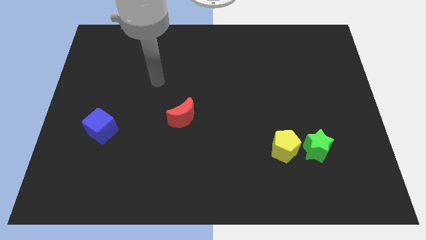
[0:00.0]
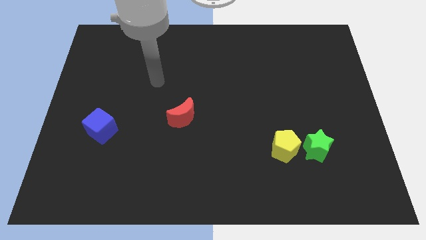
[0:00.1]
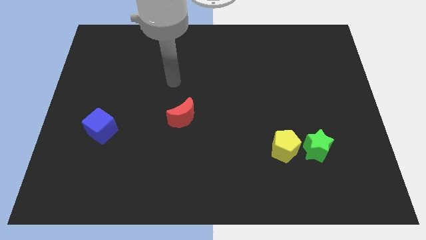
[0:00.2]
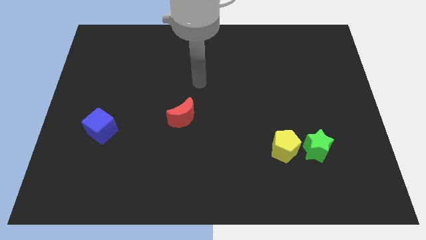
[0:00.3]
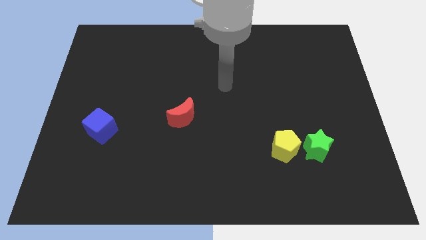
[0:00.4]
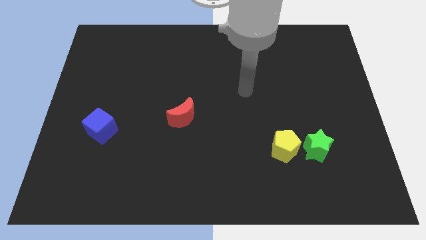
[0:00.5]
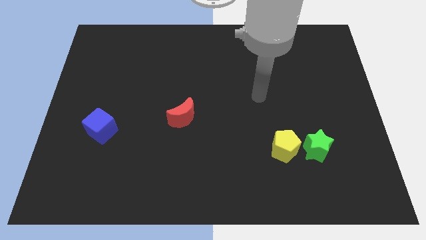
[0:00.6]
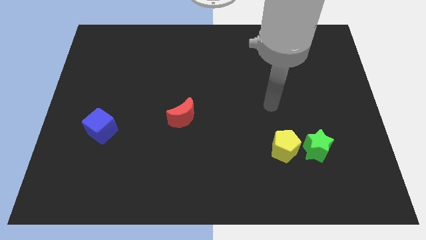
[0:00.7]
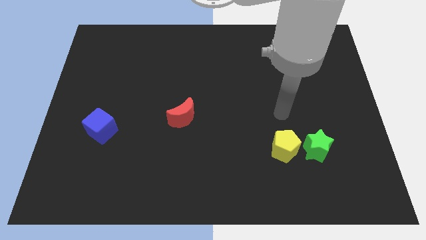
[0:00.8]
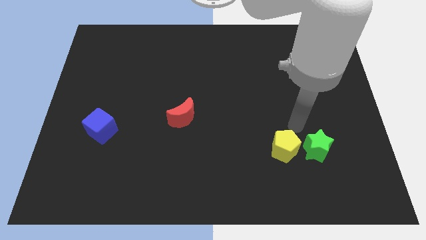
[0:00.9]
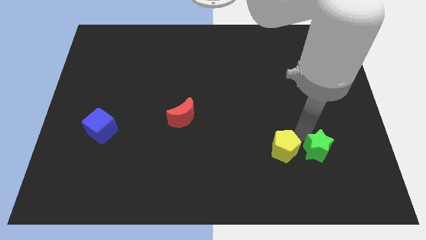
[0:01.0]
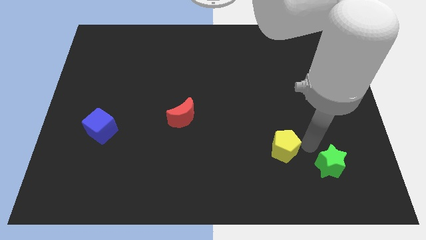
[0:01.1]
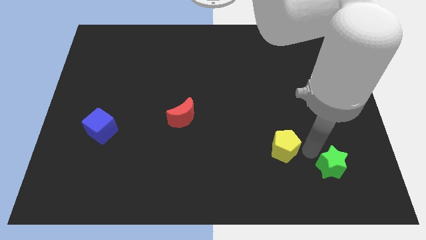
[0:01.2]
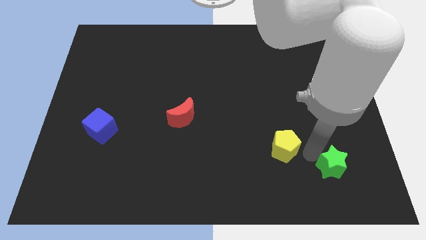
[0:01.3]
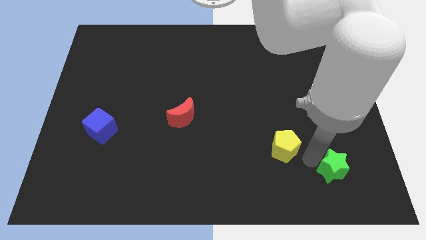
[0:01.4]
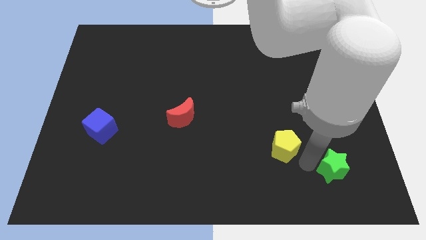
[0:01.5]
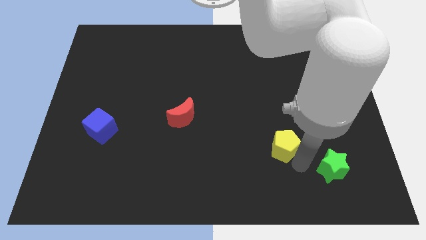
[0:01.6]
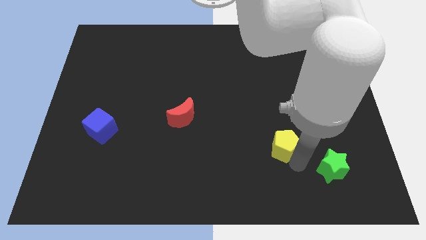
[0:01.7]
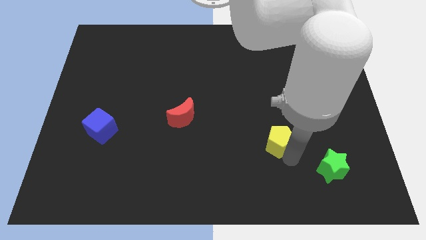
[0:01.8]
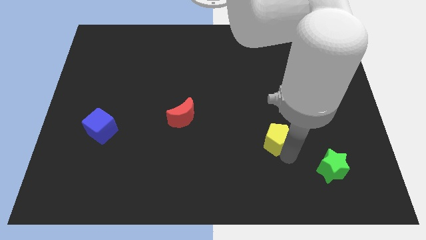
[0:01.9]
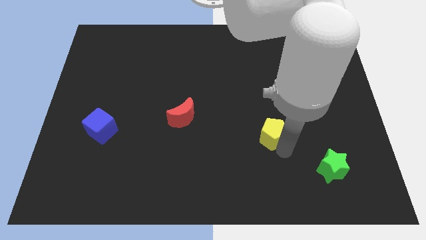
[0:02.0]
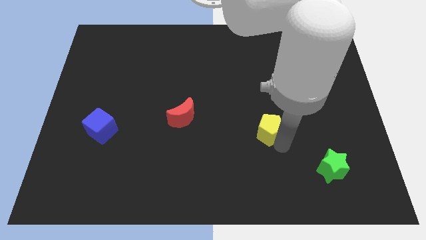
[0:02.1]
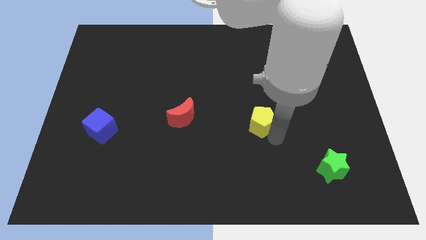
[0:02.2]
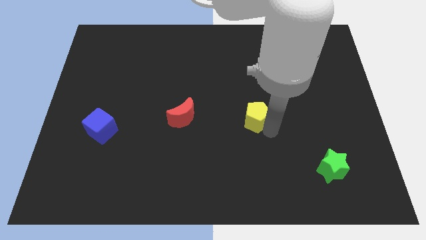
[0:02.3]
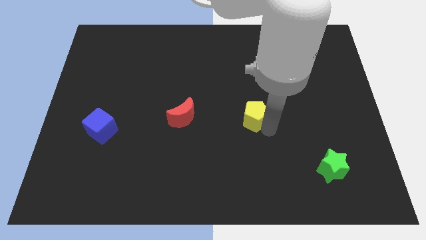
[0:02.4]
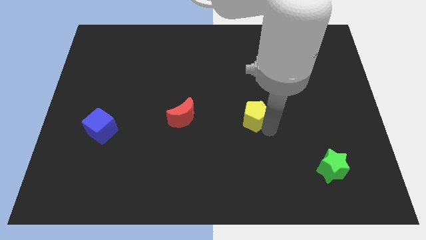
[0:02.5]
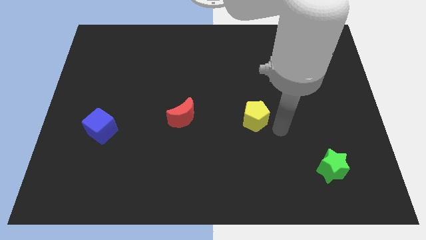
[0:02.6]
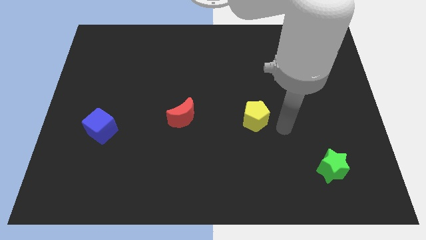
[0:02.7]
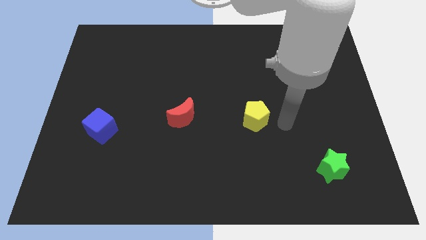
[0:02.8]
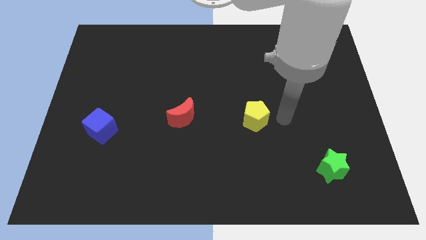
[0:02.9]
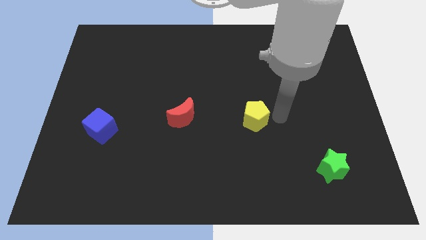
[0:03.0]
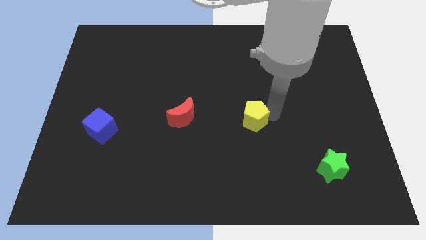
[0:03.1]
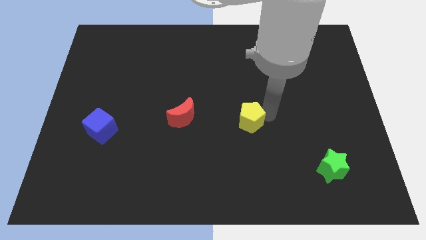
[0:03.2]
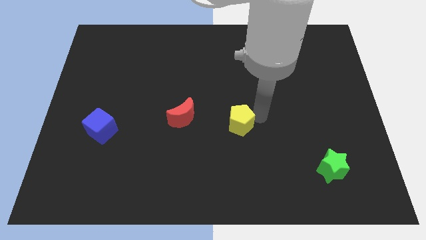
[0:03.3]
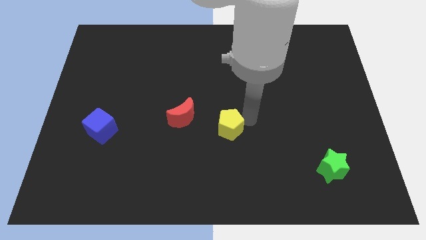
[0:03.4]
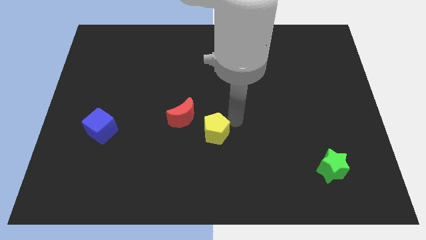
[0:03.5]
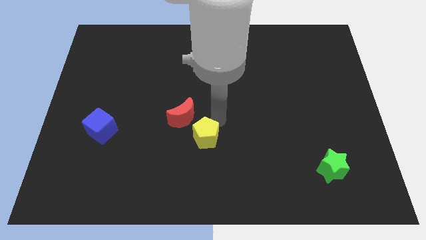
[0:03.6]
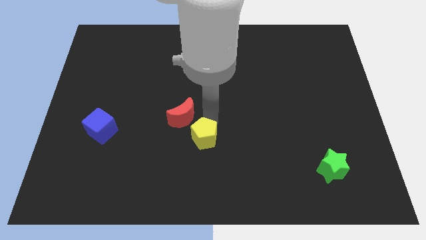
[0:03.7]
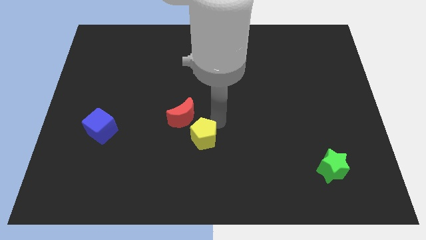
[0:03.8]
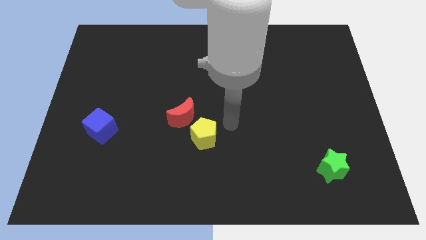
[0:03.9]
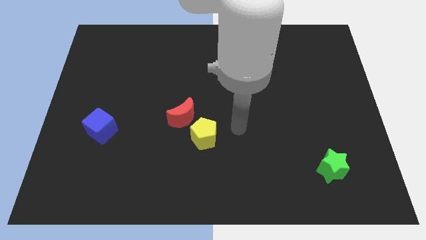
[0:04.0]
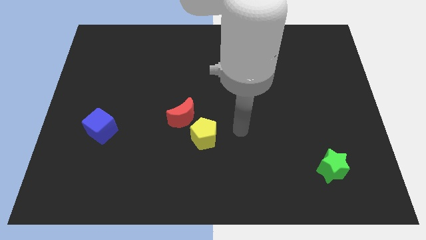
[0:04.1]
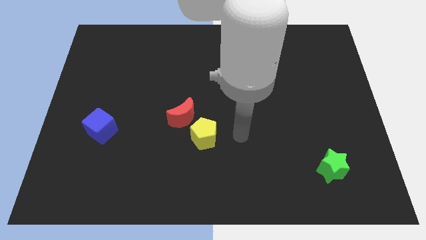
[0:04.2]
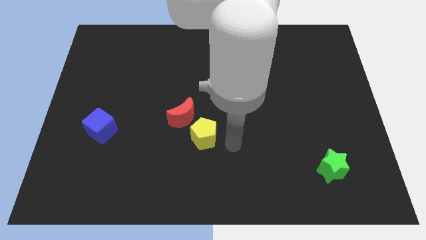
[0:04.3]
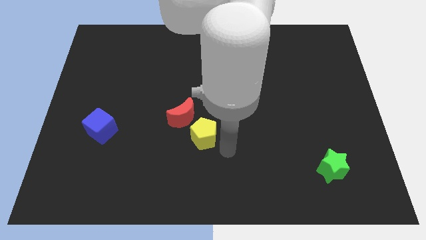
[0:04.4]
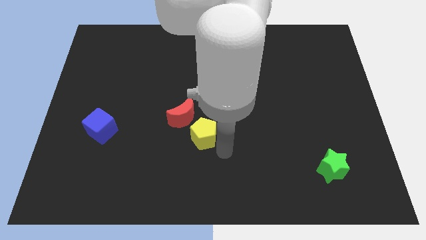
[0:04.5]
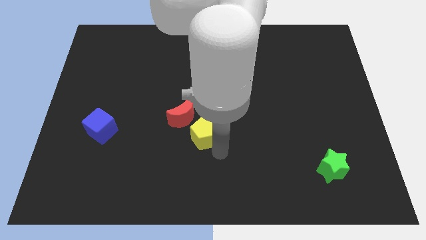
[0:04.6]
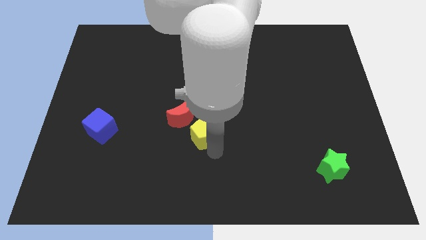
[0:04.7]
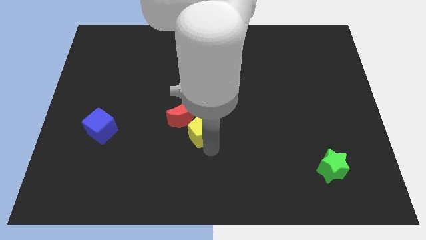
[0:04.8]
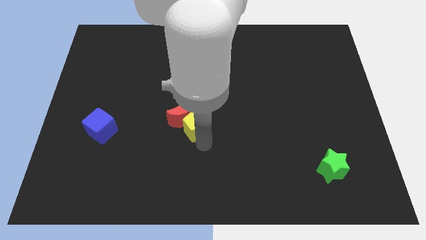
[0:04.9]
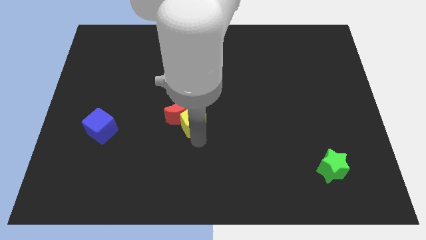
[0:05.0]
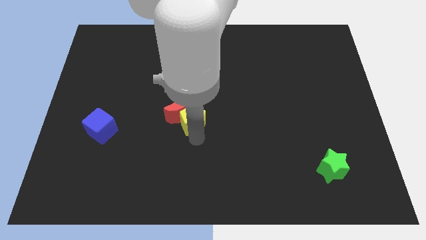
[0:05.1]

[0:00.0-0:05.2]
push the pentagon next to the red moon

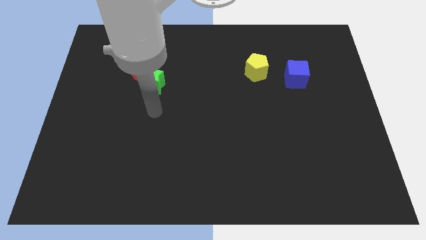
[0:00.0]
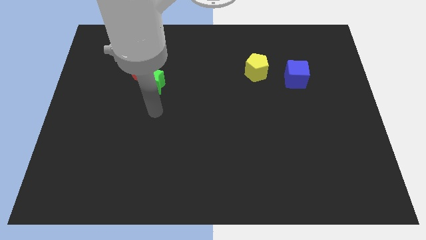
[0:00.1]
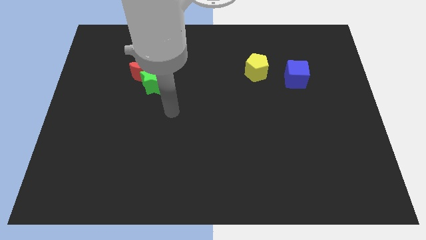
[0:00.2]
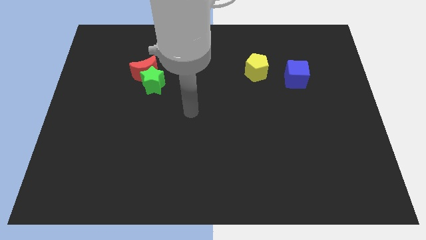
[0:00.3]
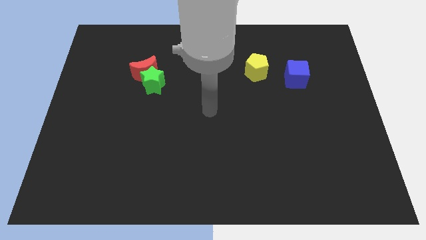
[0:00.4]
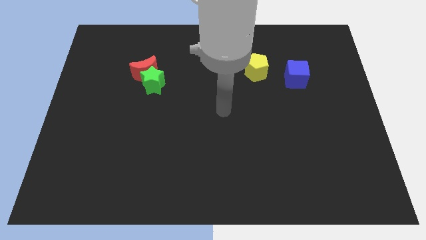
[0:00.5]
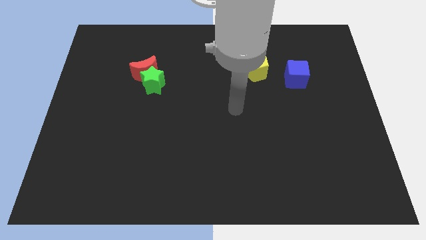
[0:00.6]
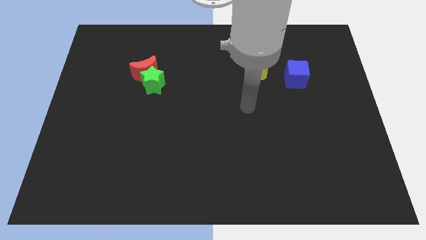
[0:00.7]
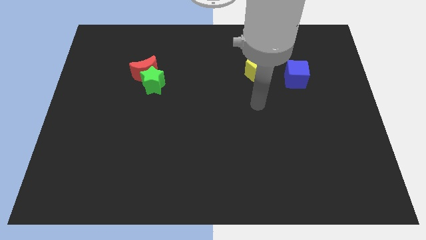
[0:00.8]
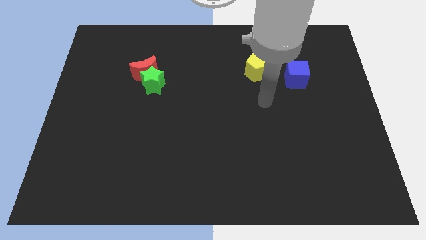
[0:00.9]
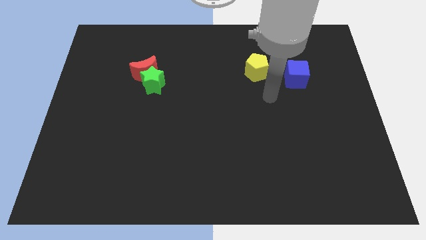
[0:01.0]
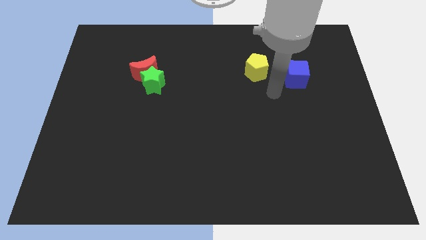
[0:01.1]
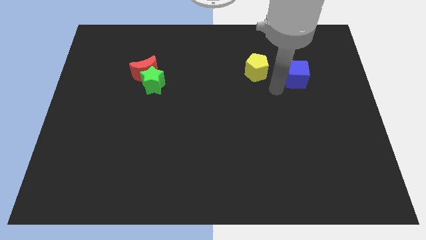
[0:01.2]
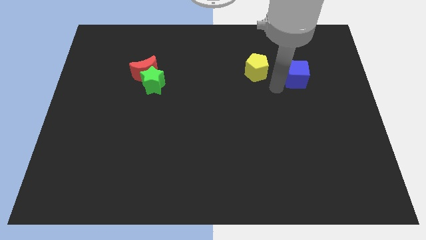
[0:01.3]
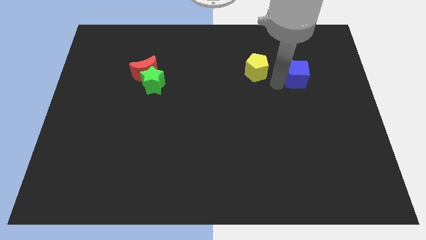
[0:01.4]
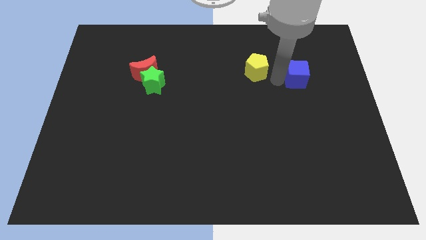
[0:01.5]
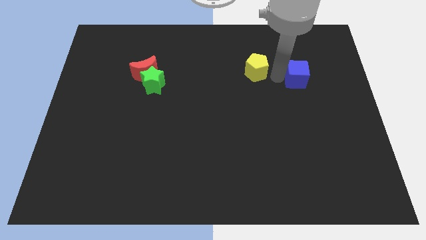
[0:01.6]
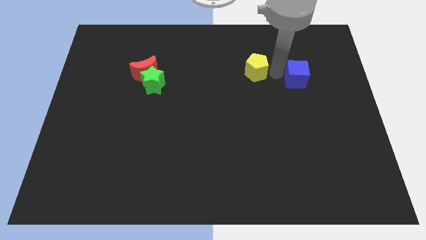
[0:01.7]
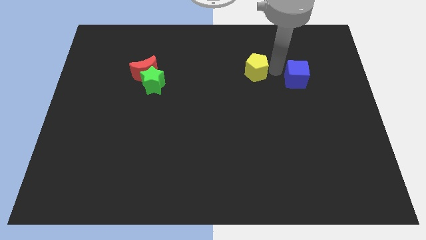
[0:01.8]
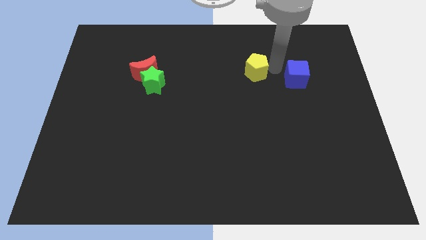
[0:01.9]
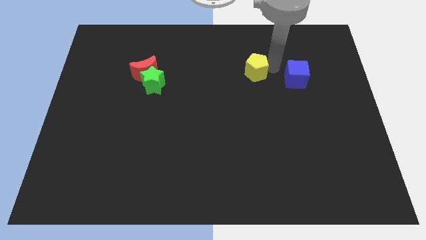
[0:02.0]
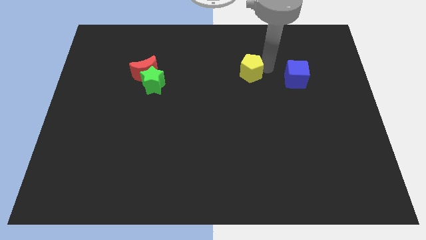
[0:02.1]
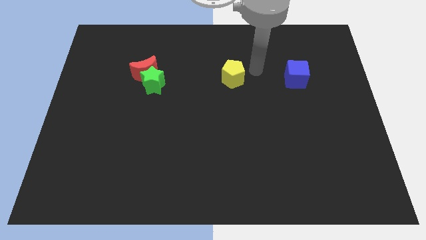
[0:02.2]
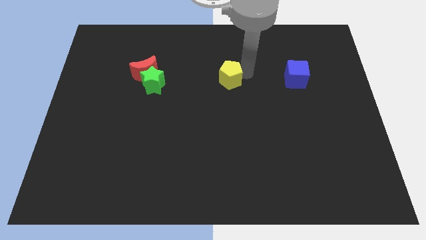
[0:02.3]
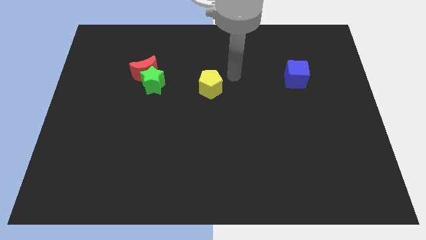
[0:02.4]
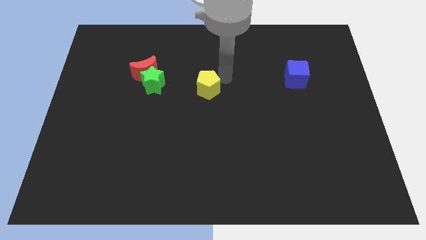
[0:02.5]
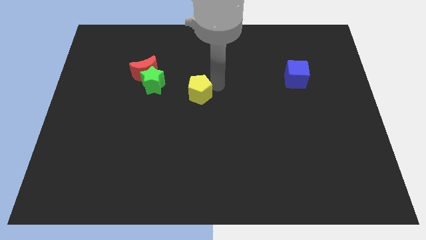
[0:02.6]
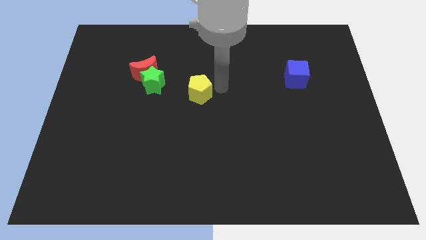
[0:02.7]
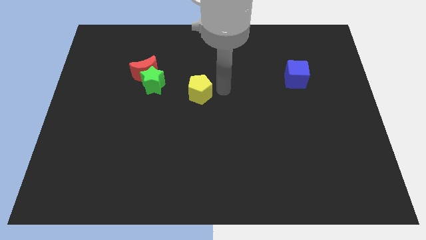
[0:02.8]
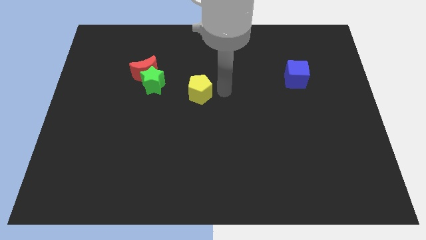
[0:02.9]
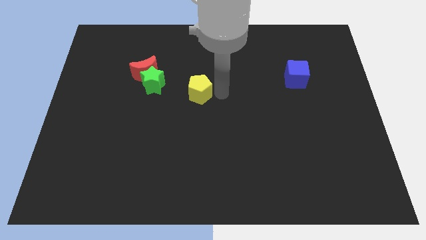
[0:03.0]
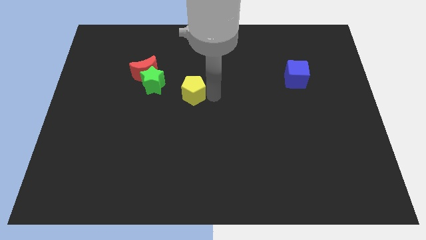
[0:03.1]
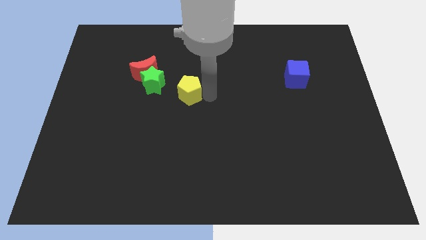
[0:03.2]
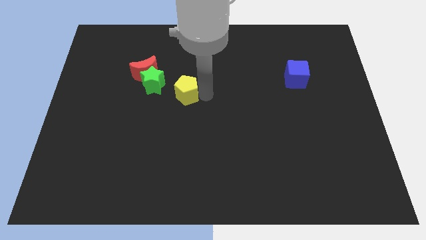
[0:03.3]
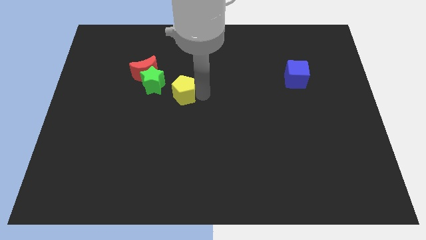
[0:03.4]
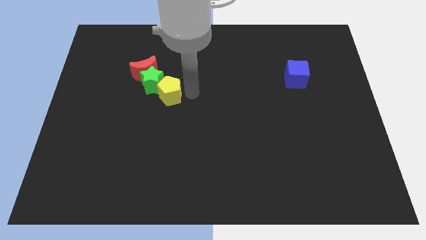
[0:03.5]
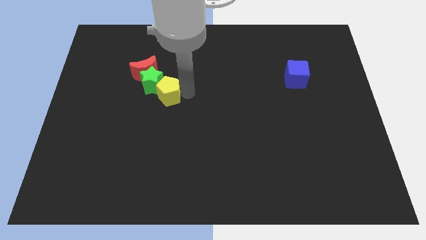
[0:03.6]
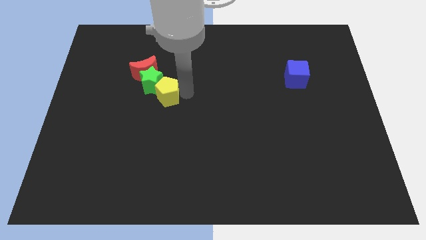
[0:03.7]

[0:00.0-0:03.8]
move the pentagon next to the green block
